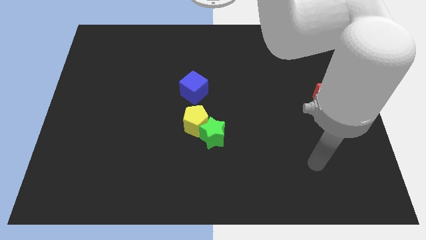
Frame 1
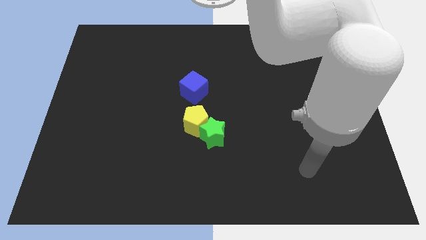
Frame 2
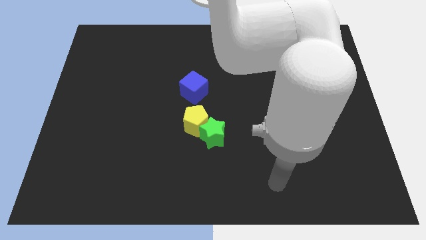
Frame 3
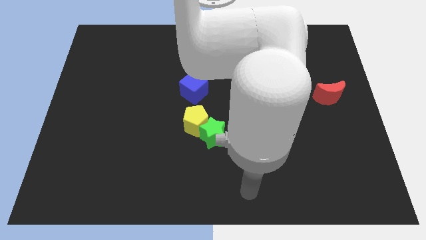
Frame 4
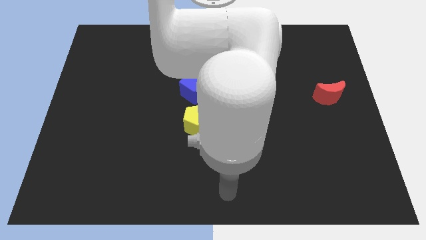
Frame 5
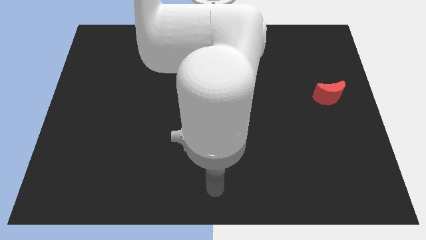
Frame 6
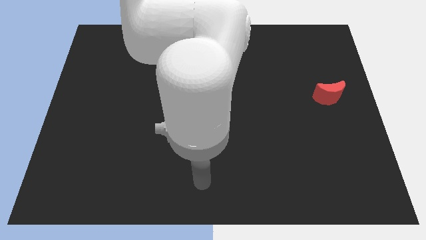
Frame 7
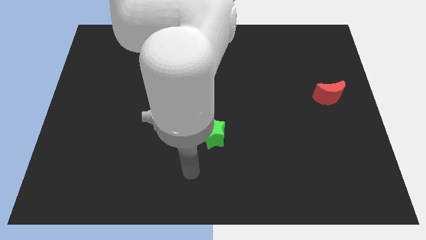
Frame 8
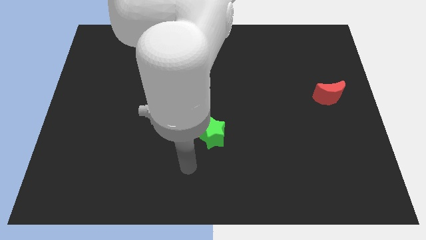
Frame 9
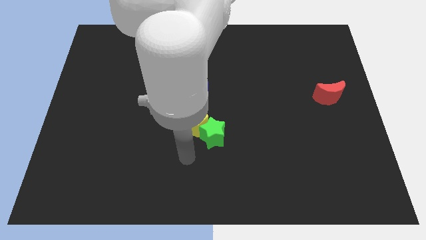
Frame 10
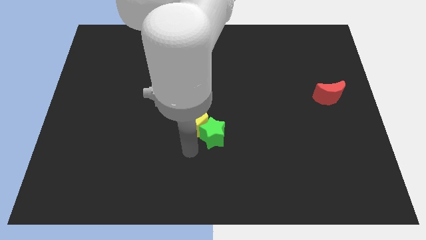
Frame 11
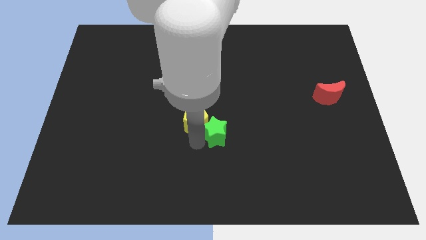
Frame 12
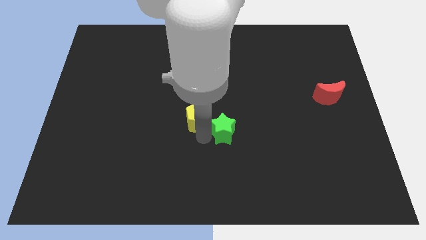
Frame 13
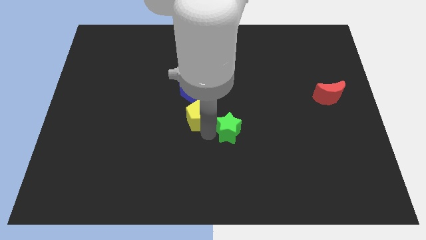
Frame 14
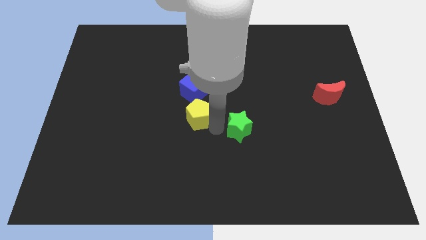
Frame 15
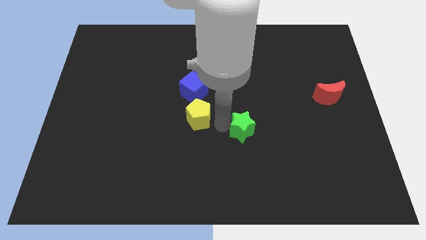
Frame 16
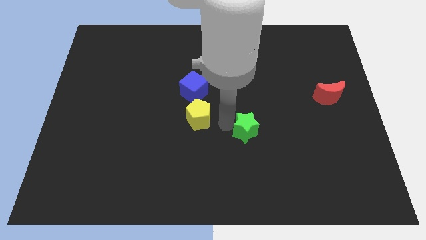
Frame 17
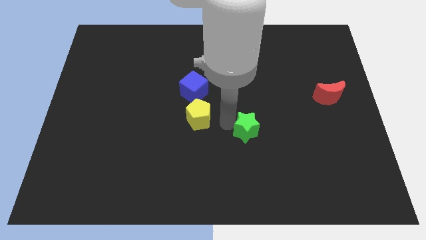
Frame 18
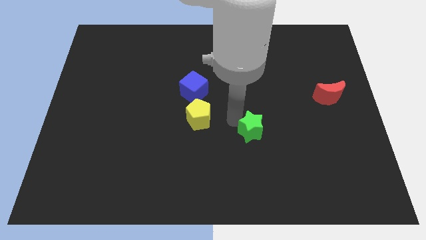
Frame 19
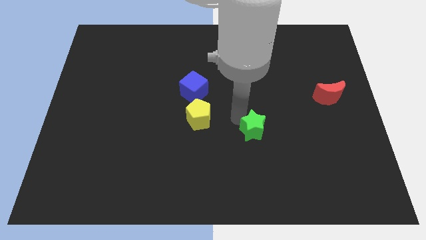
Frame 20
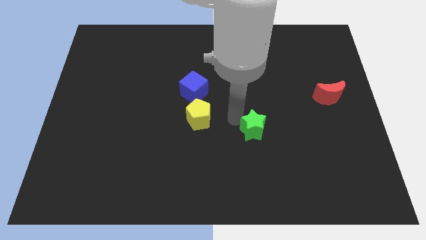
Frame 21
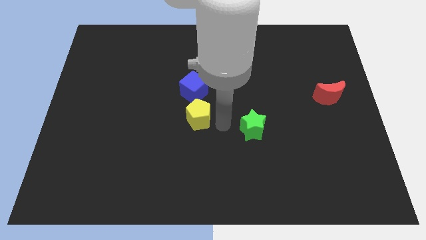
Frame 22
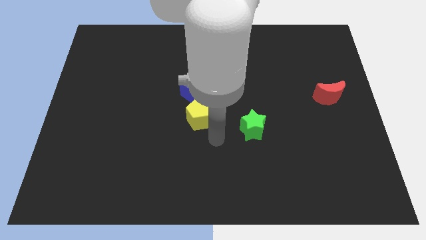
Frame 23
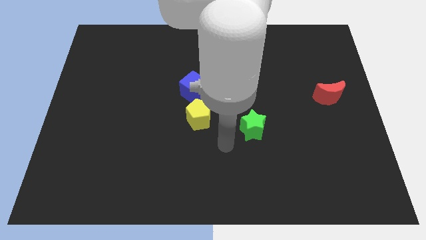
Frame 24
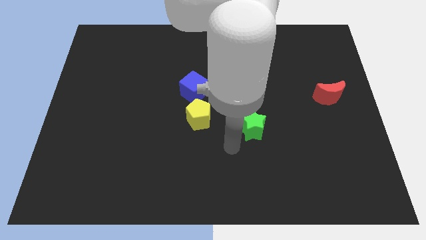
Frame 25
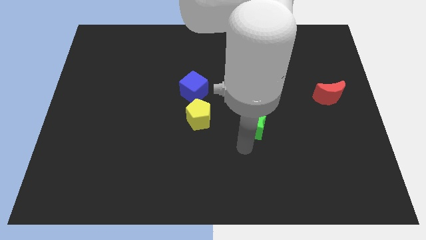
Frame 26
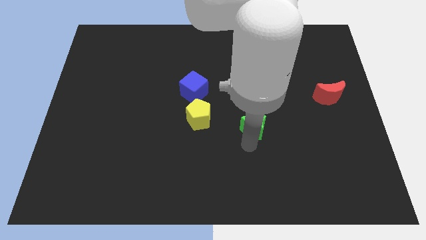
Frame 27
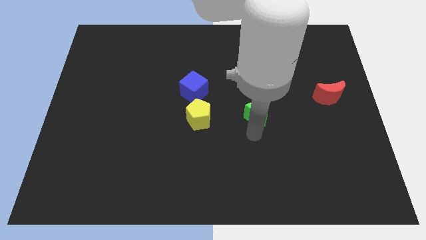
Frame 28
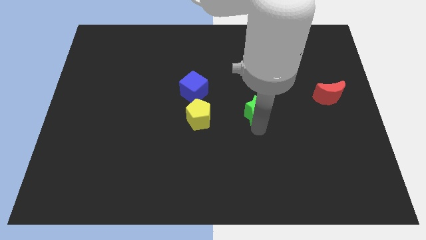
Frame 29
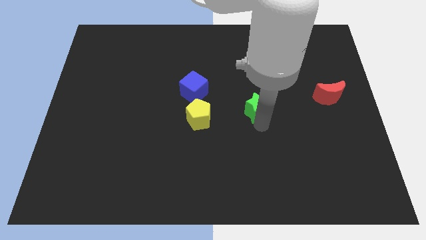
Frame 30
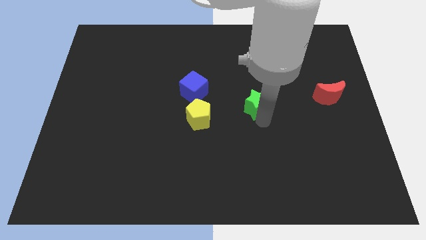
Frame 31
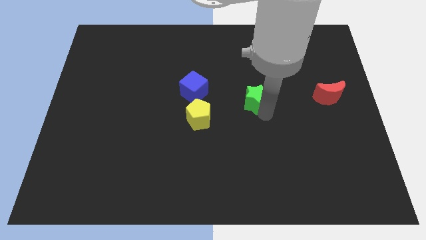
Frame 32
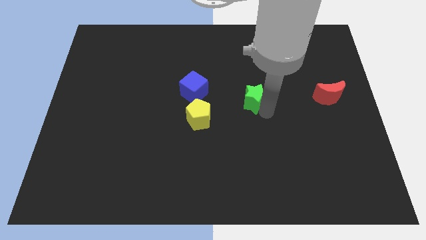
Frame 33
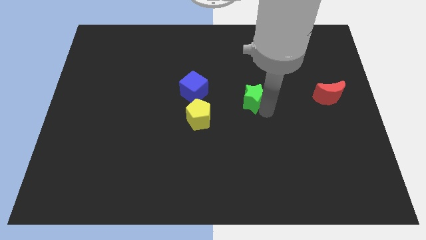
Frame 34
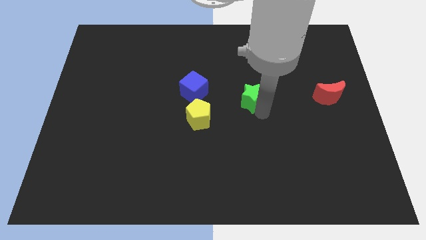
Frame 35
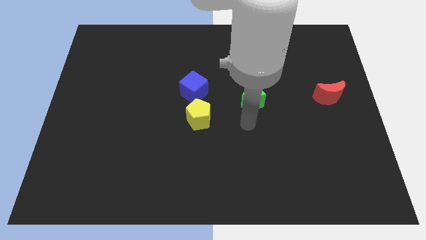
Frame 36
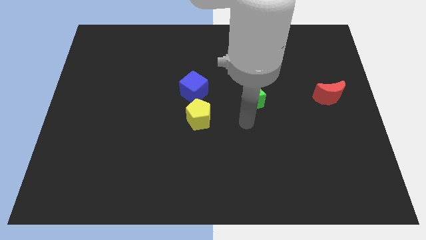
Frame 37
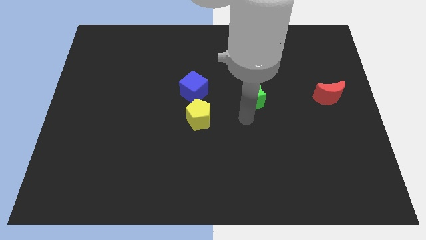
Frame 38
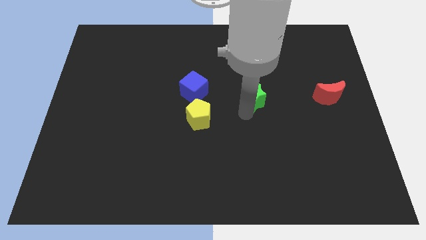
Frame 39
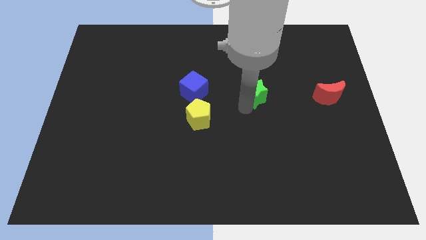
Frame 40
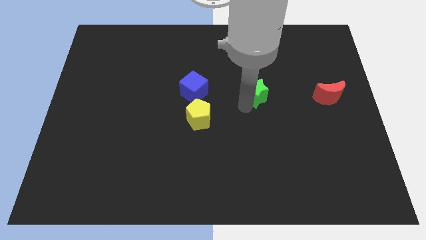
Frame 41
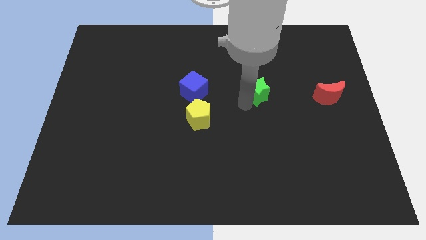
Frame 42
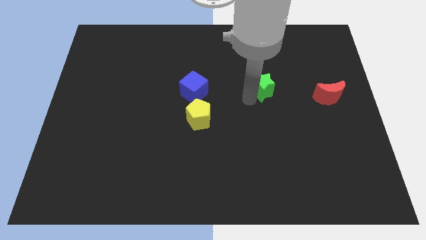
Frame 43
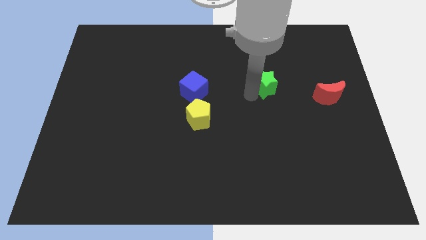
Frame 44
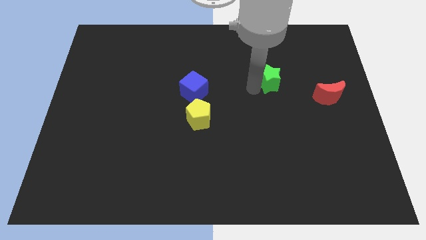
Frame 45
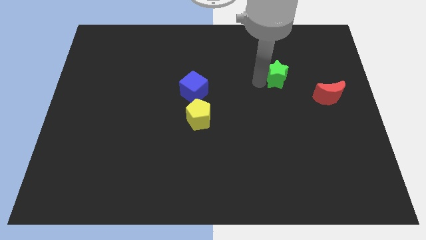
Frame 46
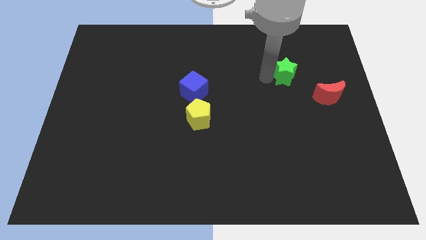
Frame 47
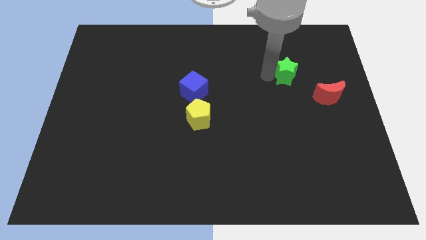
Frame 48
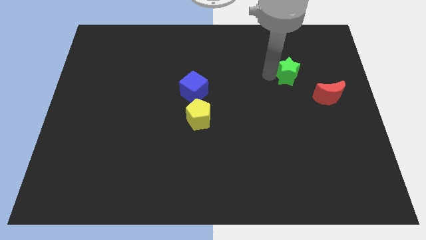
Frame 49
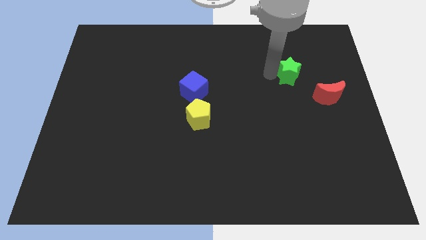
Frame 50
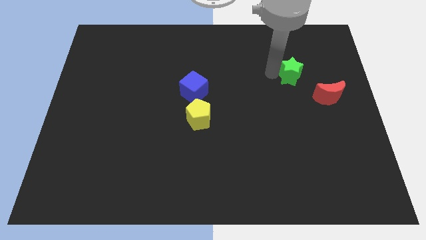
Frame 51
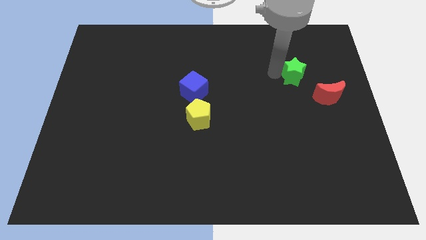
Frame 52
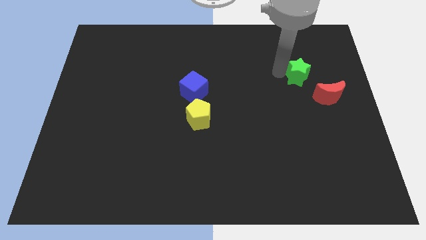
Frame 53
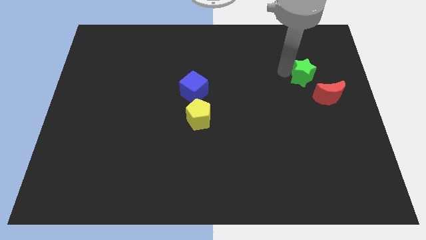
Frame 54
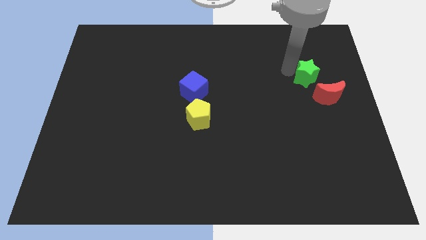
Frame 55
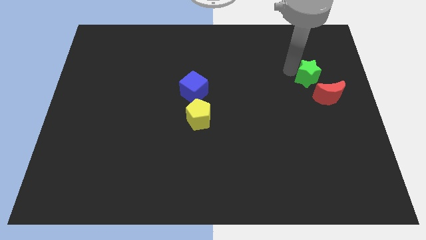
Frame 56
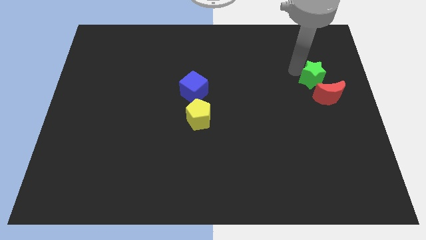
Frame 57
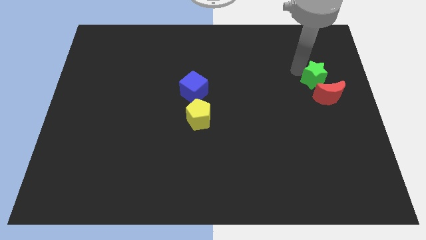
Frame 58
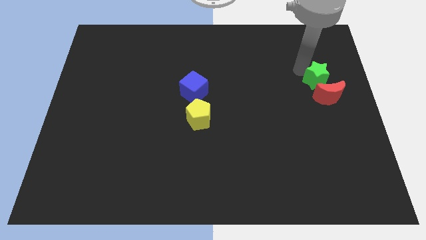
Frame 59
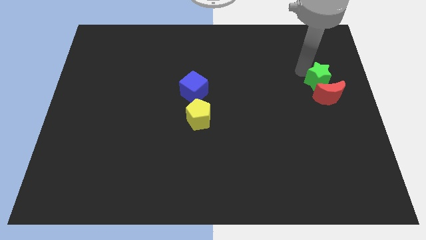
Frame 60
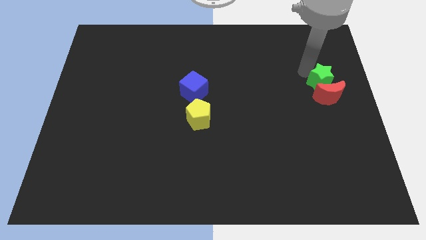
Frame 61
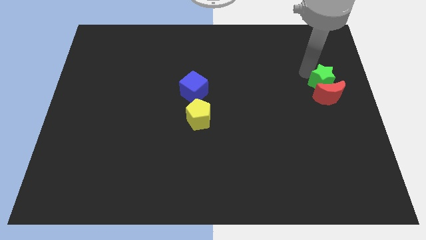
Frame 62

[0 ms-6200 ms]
put the green star to the red block

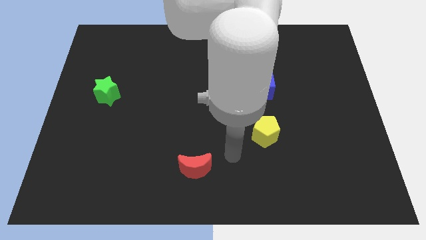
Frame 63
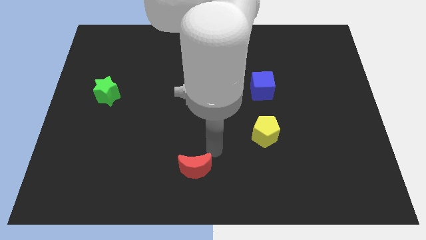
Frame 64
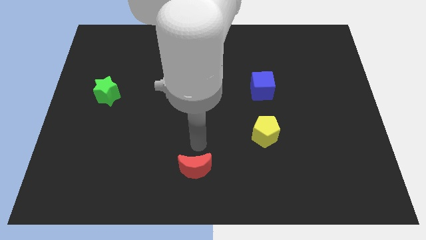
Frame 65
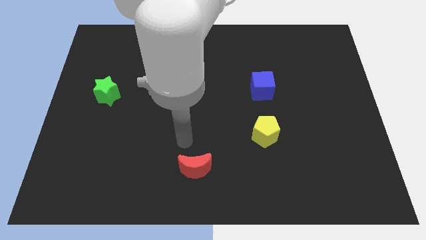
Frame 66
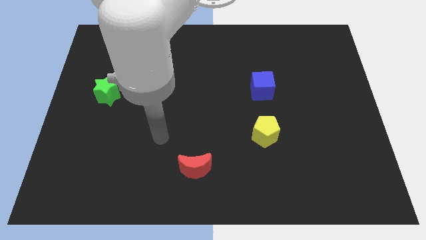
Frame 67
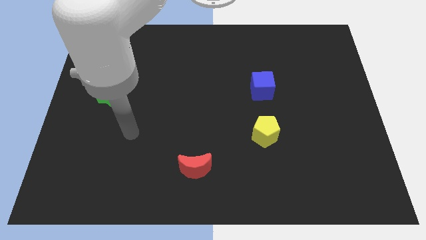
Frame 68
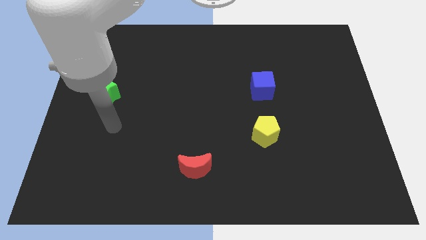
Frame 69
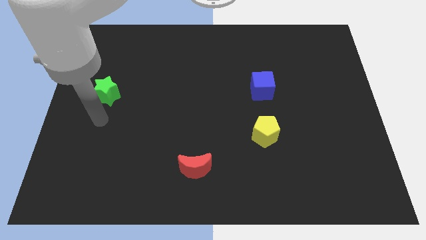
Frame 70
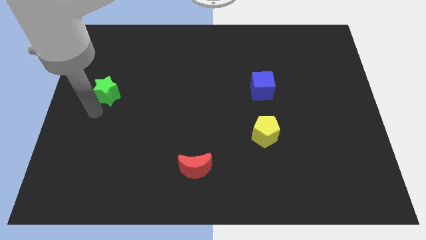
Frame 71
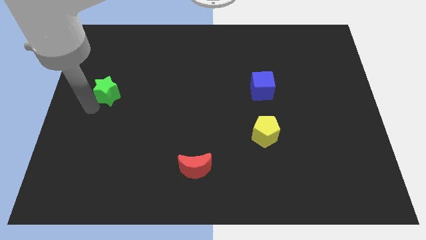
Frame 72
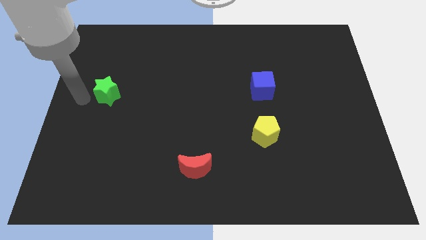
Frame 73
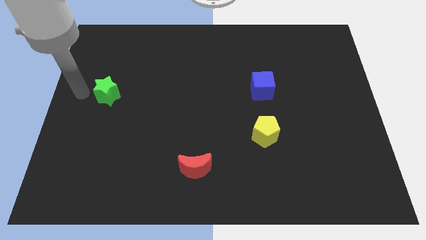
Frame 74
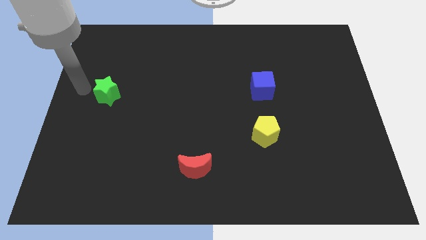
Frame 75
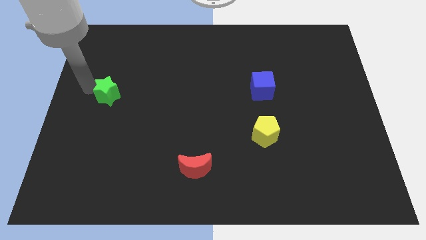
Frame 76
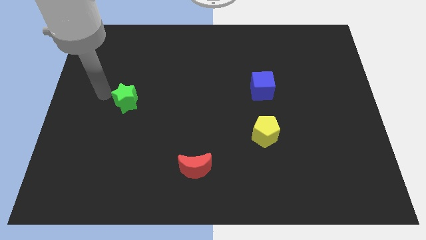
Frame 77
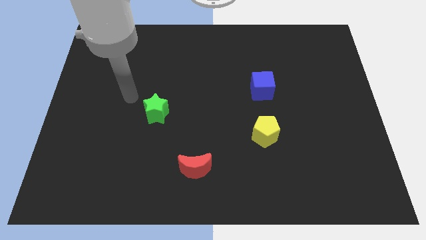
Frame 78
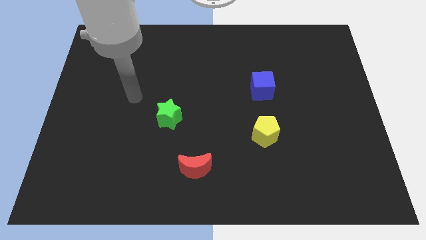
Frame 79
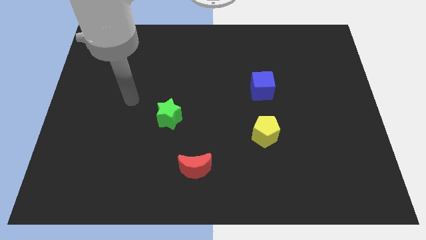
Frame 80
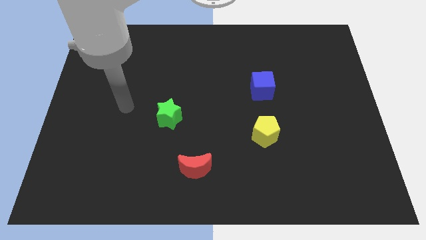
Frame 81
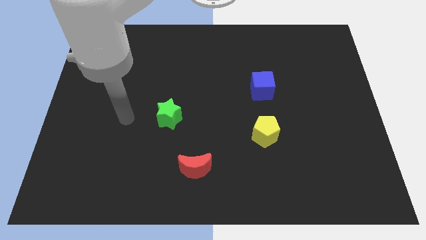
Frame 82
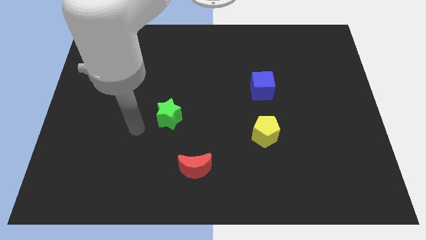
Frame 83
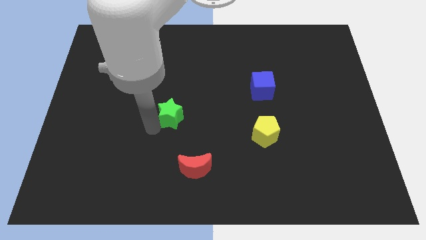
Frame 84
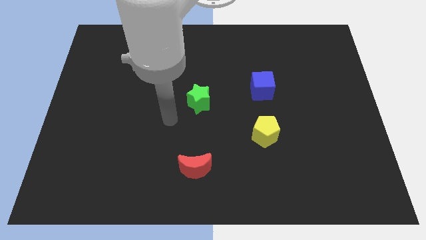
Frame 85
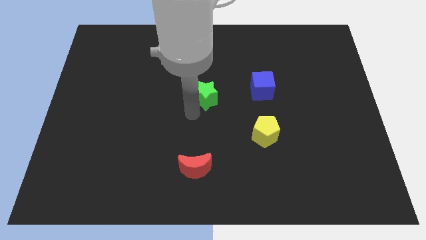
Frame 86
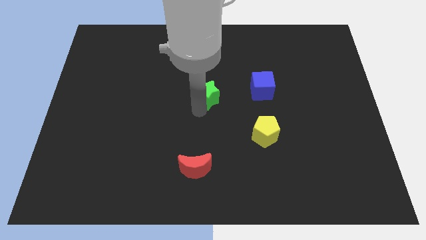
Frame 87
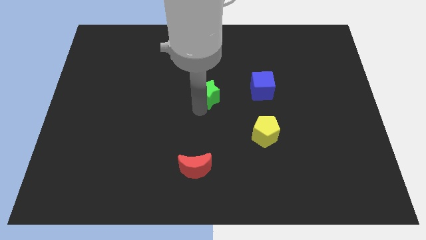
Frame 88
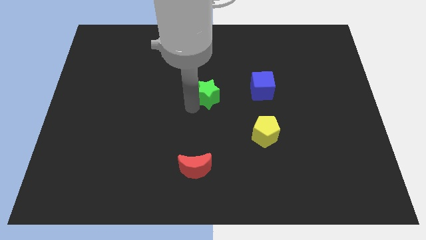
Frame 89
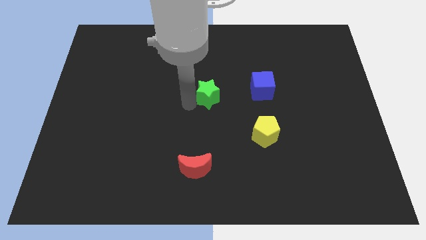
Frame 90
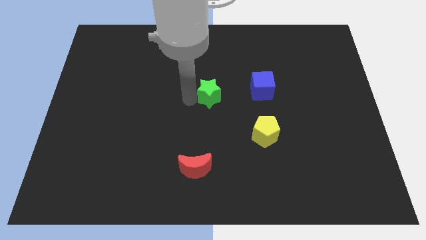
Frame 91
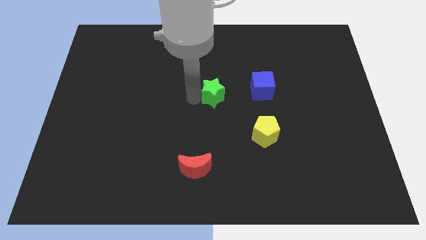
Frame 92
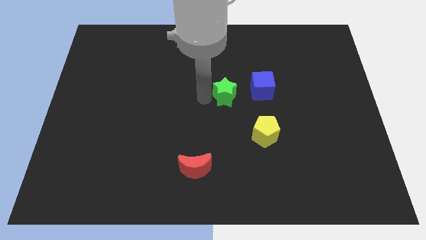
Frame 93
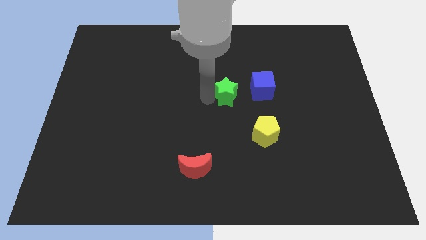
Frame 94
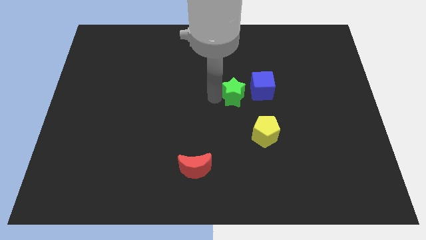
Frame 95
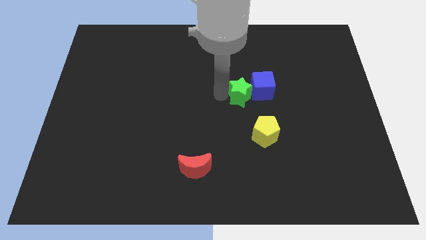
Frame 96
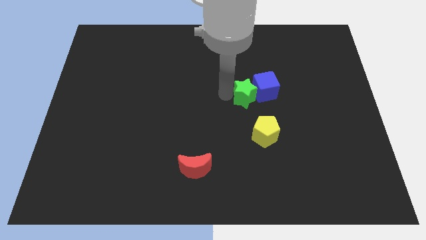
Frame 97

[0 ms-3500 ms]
put the star towards the cube
